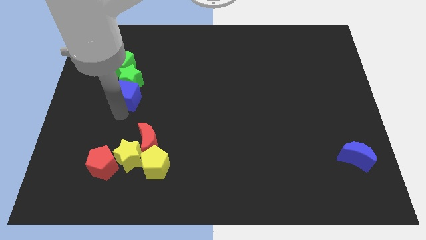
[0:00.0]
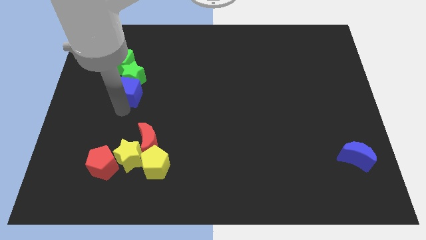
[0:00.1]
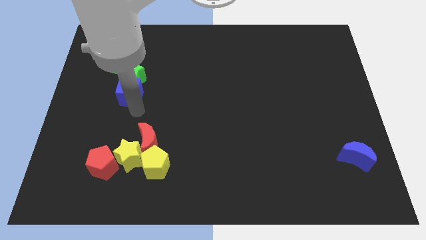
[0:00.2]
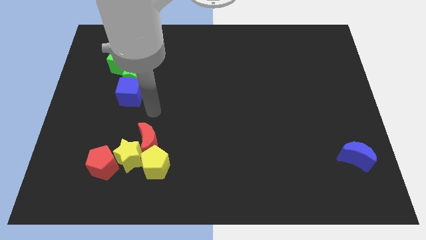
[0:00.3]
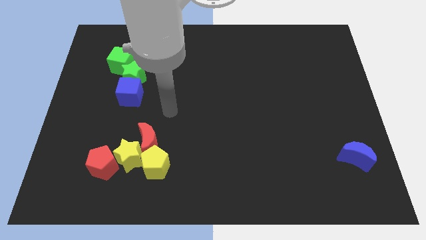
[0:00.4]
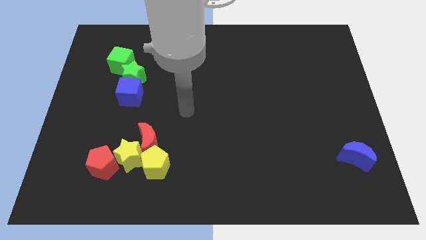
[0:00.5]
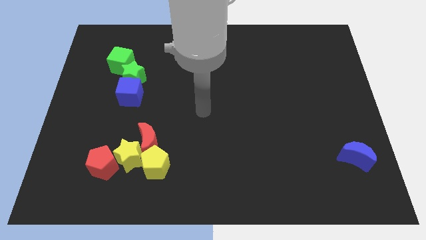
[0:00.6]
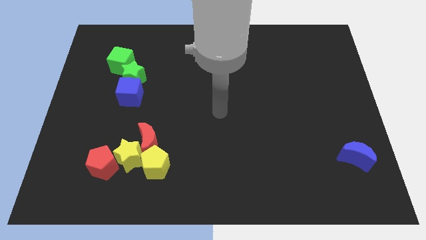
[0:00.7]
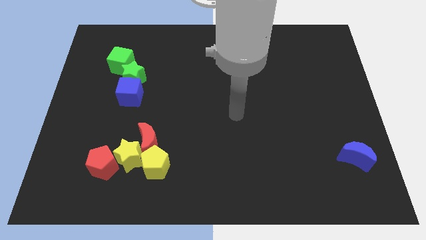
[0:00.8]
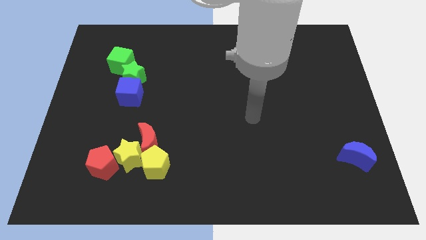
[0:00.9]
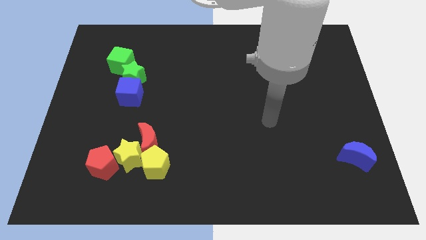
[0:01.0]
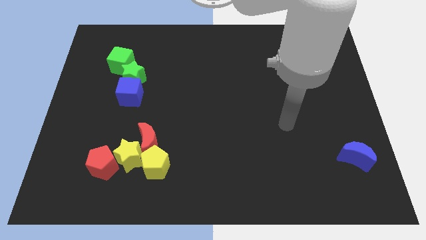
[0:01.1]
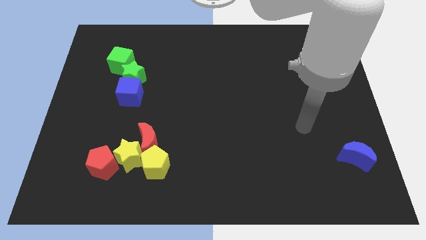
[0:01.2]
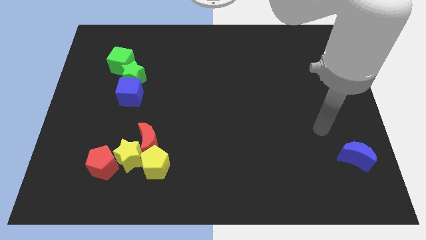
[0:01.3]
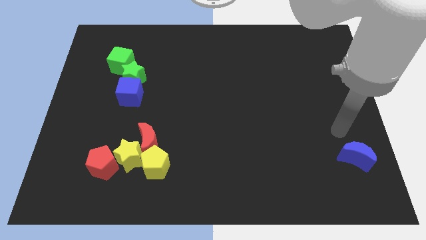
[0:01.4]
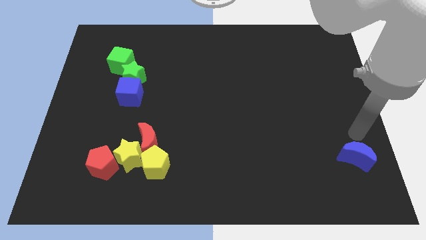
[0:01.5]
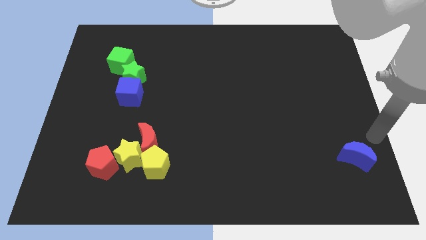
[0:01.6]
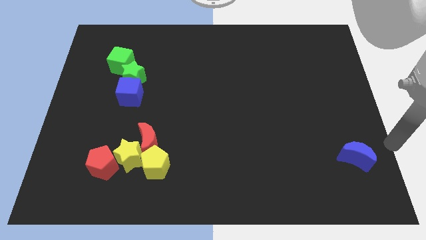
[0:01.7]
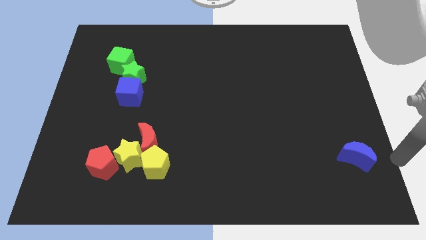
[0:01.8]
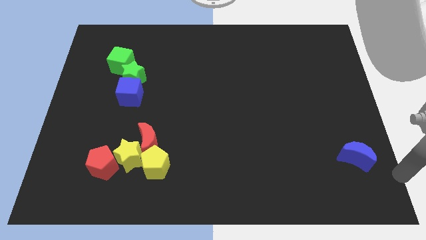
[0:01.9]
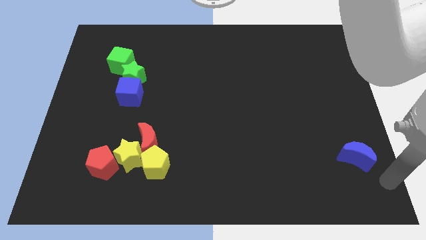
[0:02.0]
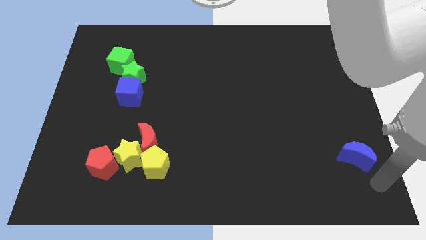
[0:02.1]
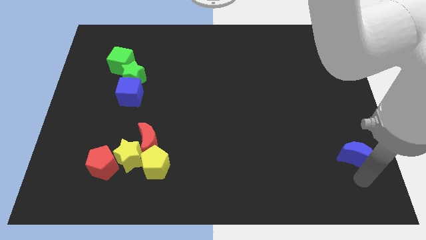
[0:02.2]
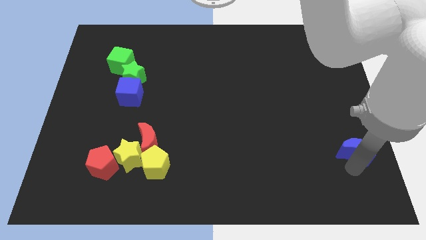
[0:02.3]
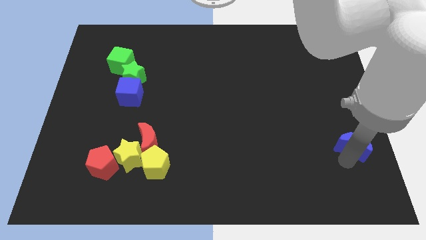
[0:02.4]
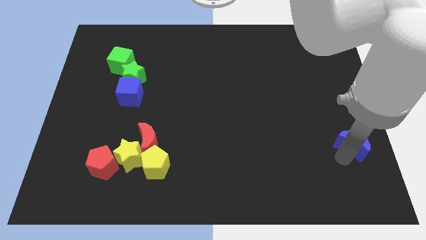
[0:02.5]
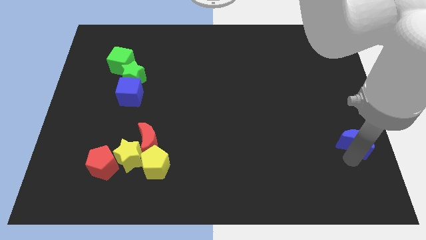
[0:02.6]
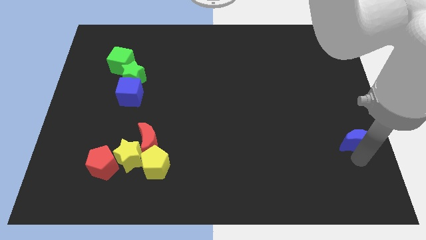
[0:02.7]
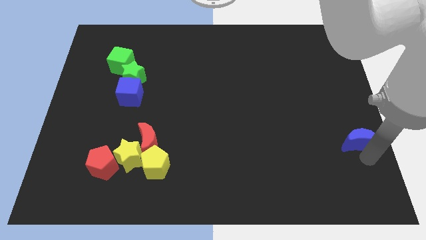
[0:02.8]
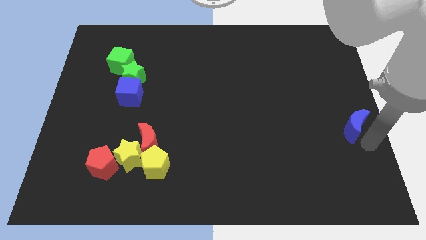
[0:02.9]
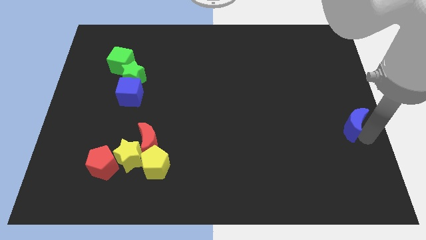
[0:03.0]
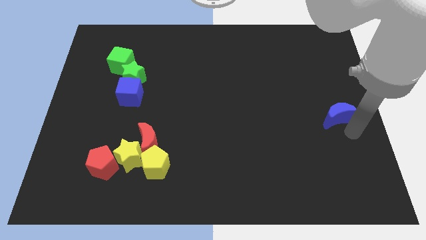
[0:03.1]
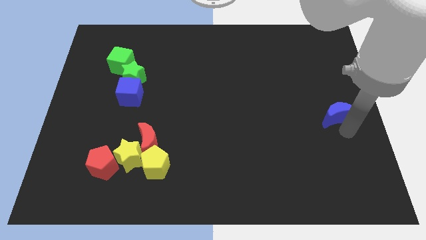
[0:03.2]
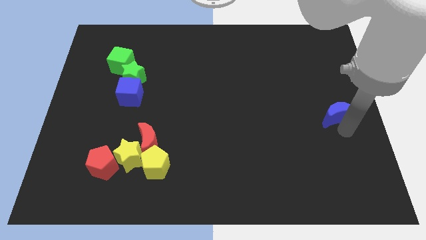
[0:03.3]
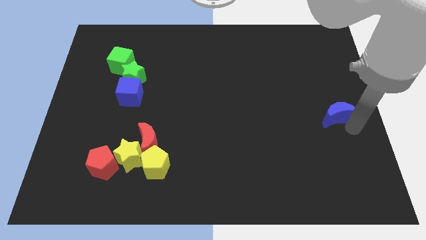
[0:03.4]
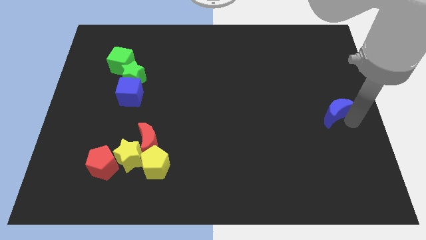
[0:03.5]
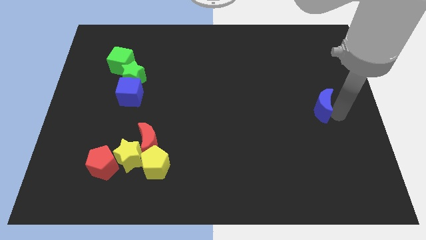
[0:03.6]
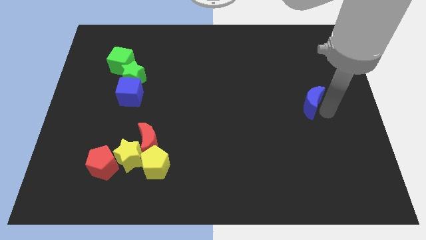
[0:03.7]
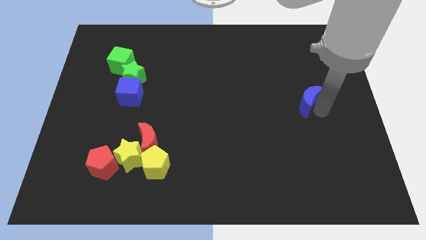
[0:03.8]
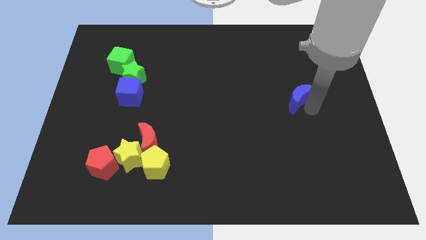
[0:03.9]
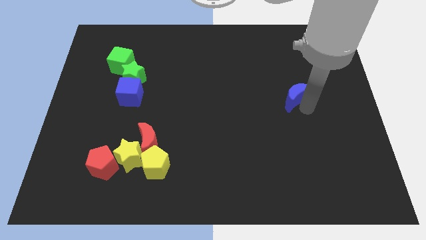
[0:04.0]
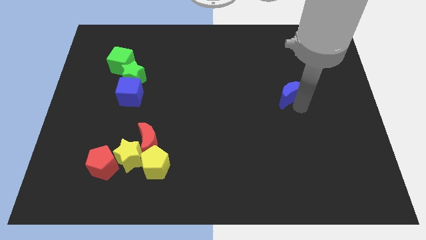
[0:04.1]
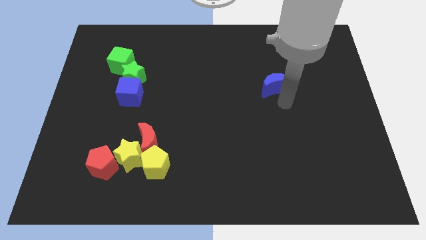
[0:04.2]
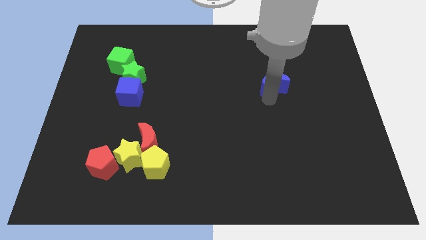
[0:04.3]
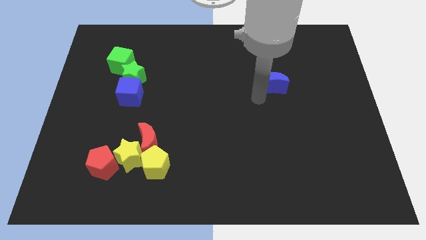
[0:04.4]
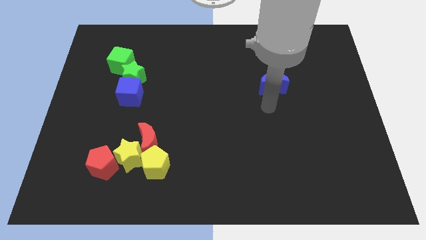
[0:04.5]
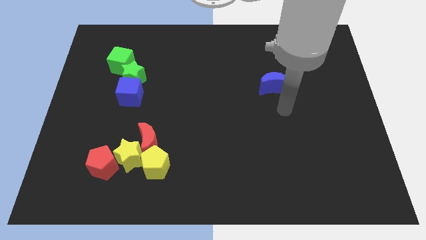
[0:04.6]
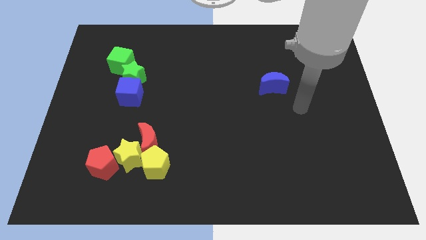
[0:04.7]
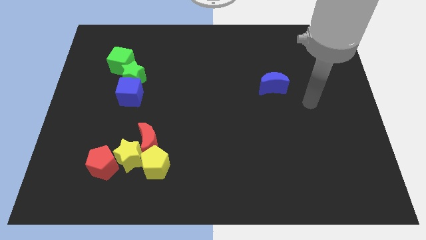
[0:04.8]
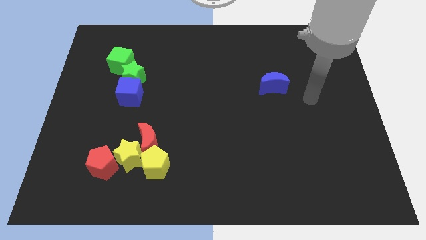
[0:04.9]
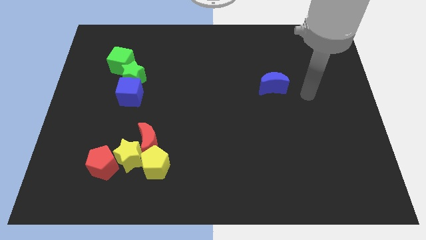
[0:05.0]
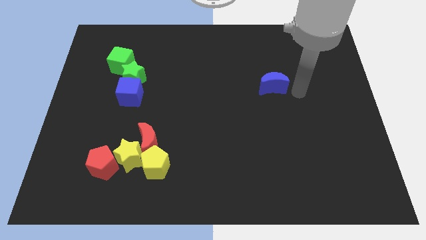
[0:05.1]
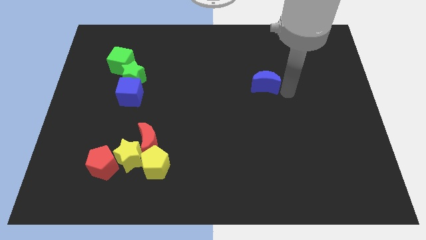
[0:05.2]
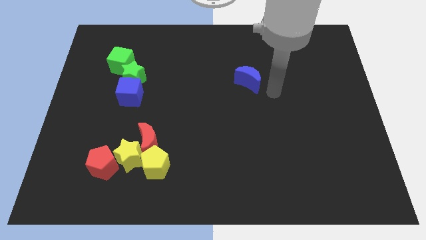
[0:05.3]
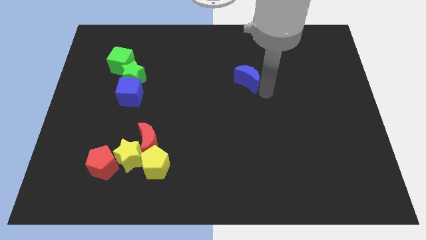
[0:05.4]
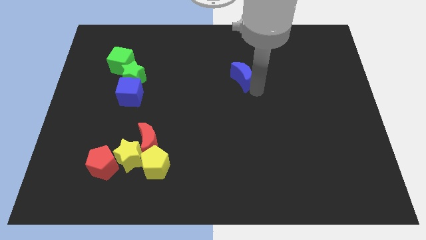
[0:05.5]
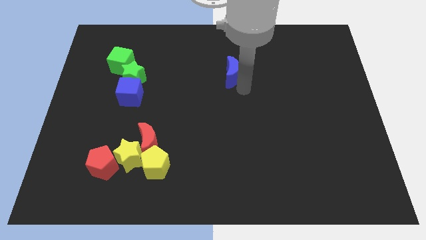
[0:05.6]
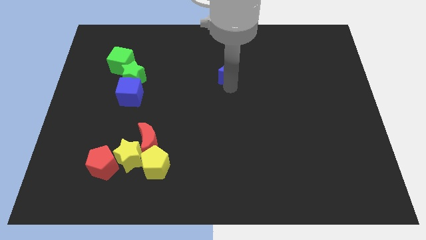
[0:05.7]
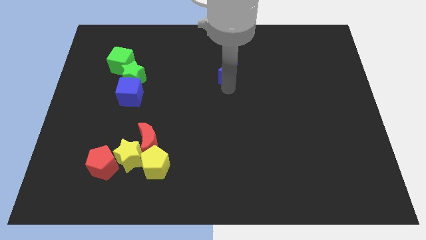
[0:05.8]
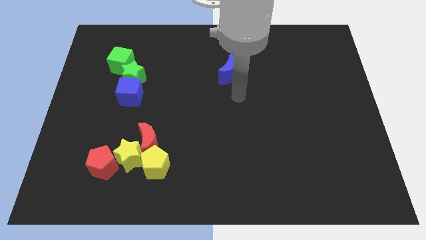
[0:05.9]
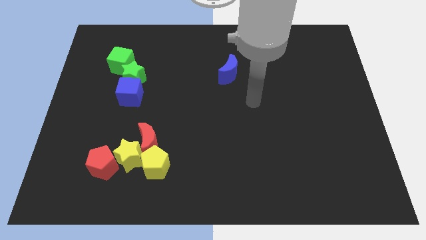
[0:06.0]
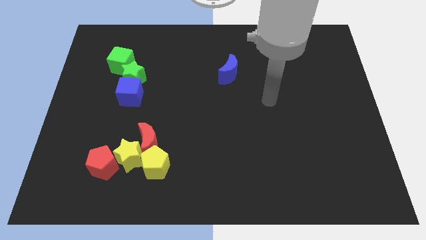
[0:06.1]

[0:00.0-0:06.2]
place the blue crescent to the right of the green blocks

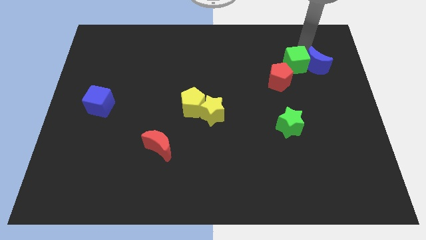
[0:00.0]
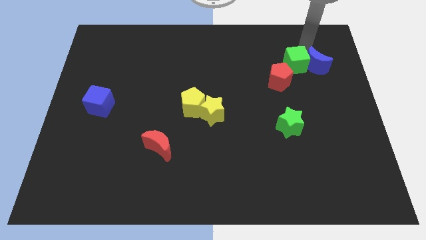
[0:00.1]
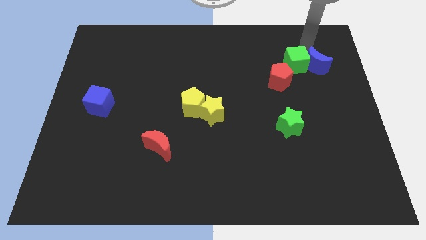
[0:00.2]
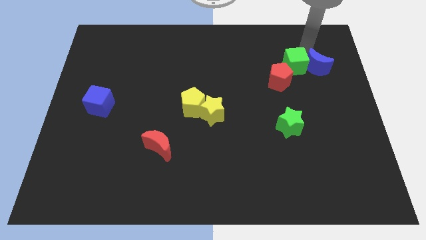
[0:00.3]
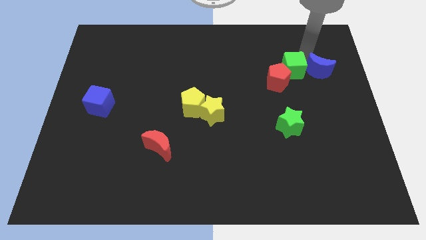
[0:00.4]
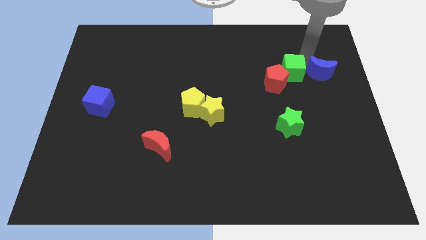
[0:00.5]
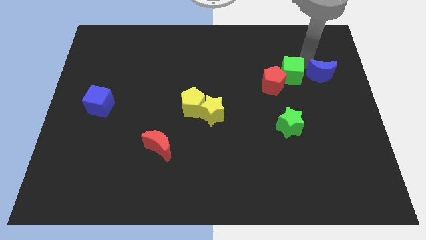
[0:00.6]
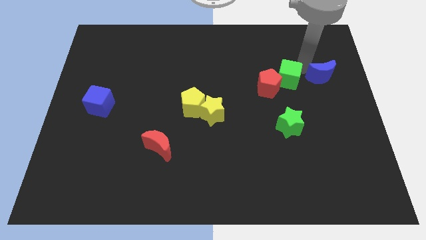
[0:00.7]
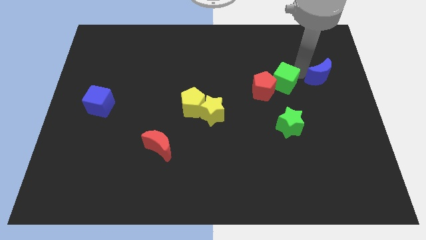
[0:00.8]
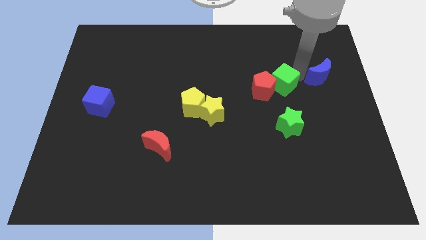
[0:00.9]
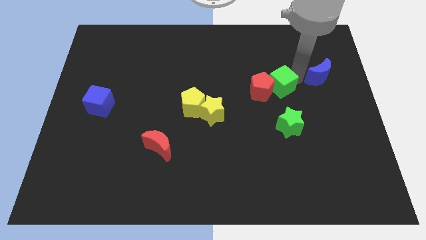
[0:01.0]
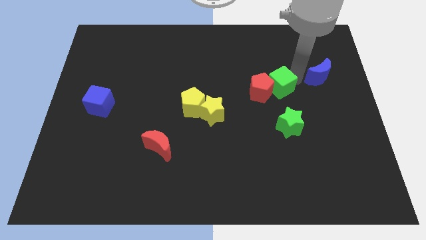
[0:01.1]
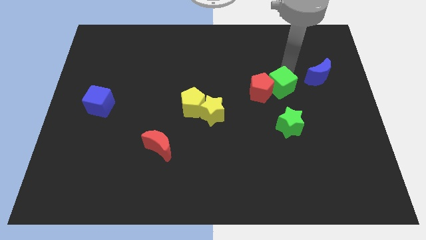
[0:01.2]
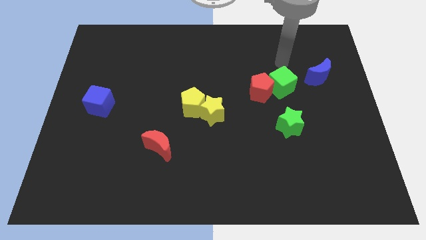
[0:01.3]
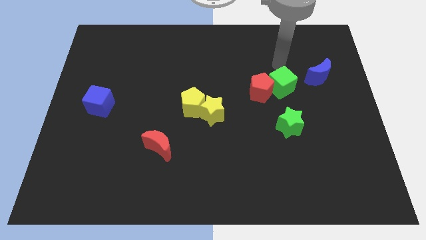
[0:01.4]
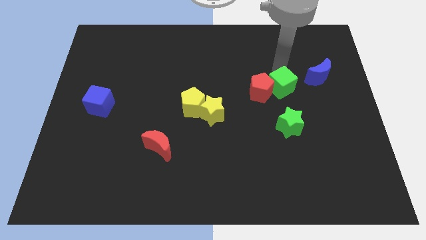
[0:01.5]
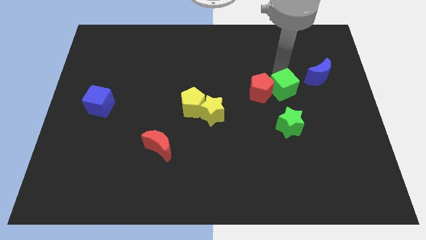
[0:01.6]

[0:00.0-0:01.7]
separate green cube from blue moon

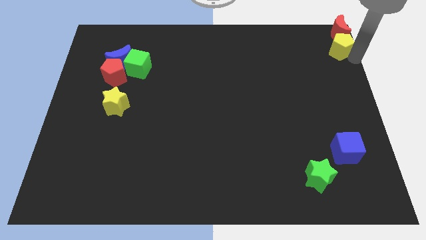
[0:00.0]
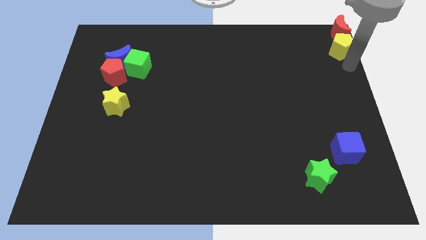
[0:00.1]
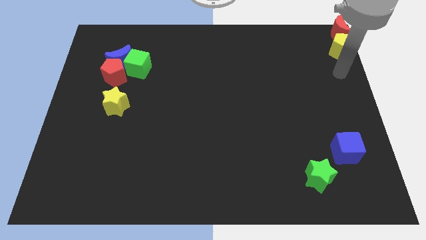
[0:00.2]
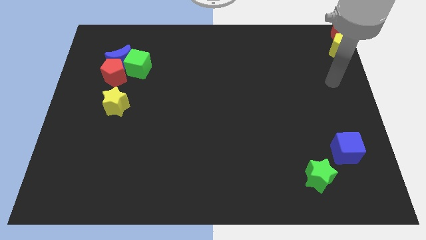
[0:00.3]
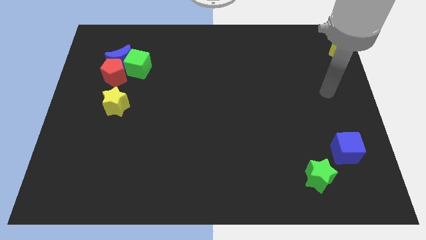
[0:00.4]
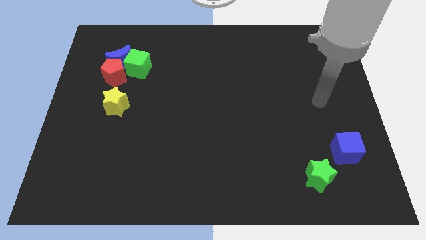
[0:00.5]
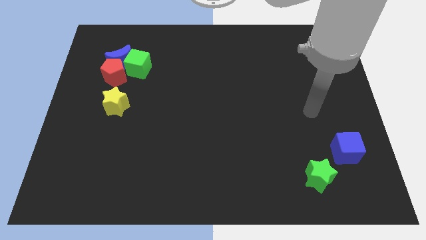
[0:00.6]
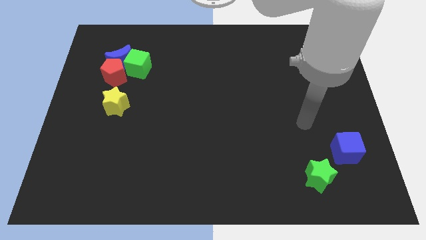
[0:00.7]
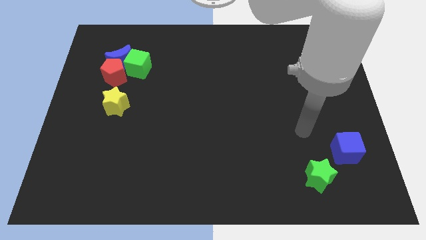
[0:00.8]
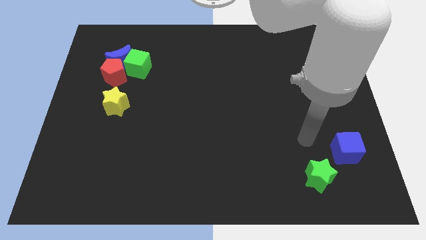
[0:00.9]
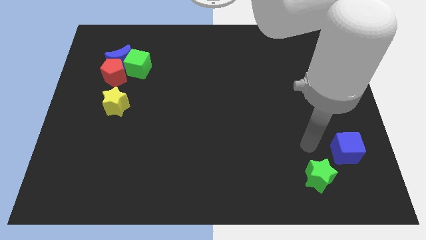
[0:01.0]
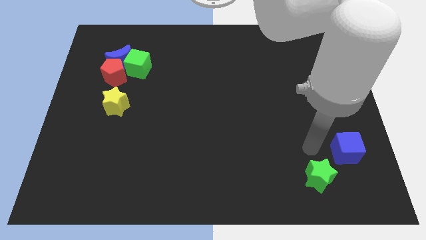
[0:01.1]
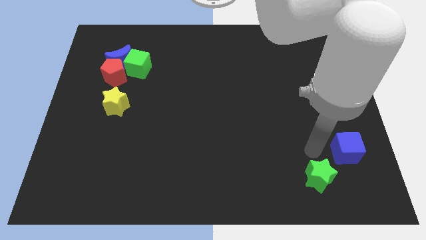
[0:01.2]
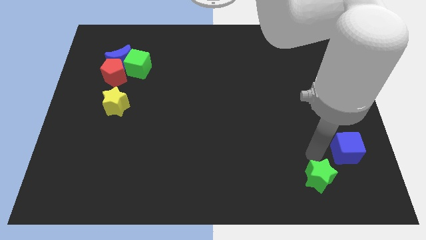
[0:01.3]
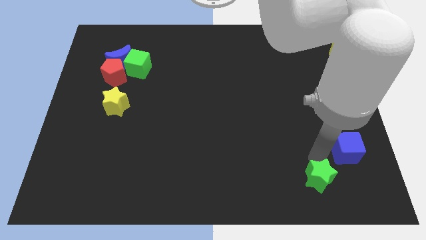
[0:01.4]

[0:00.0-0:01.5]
move your arm away from the yellow pentagon
